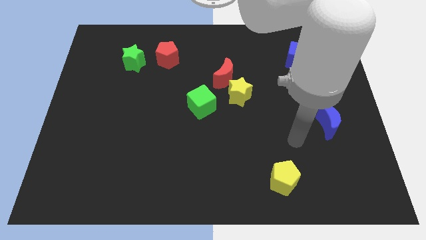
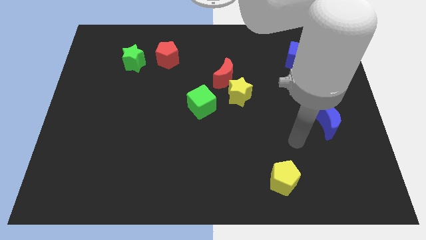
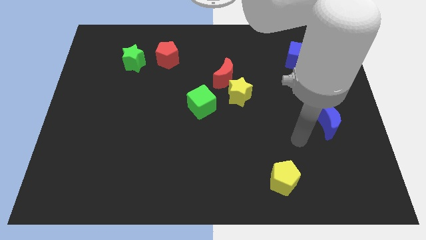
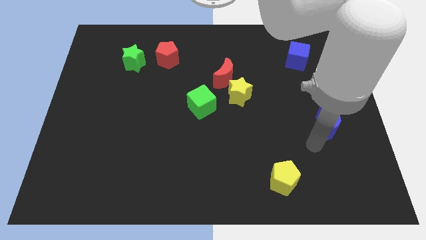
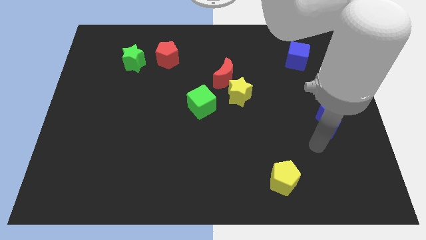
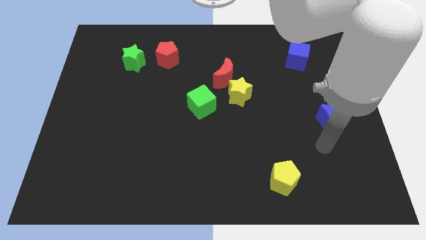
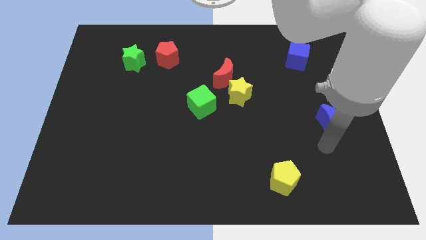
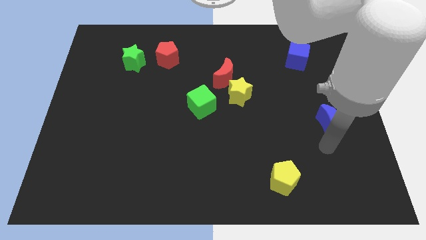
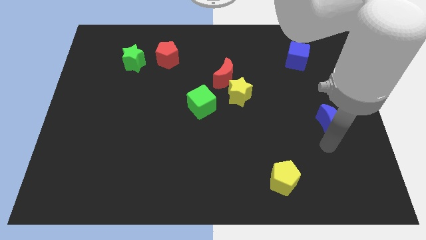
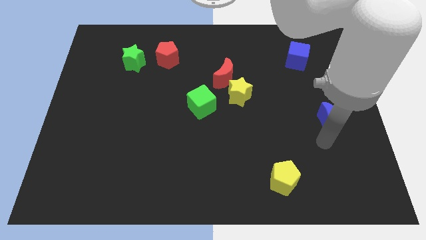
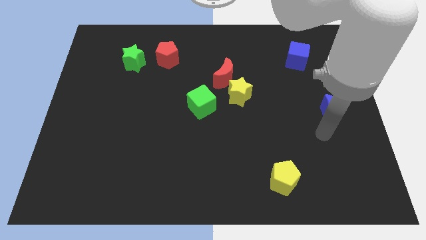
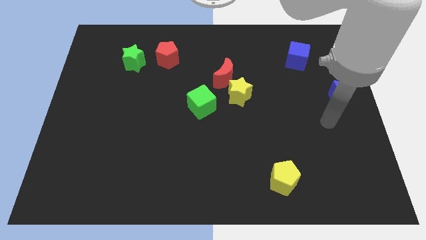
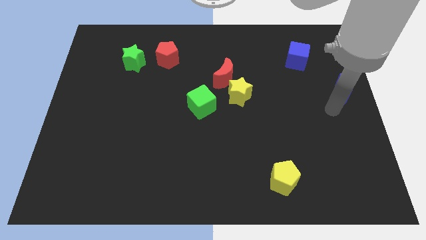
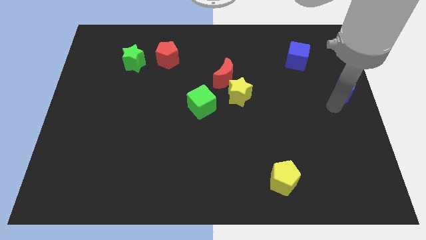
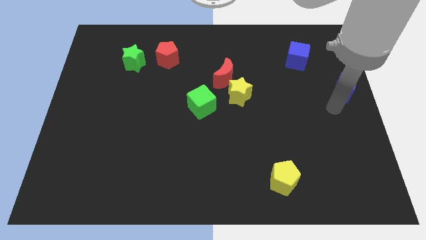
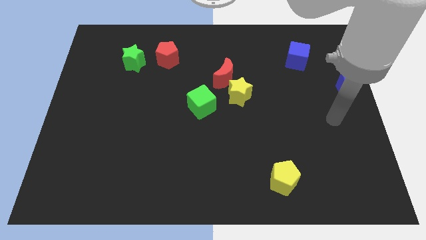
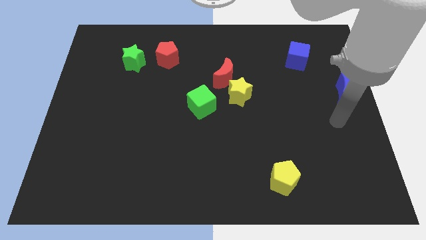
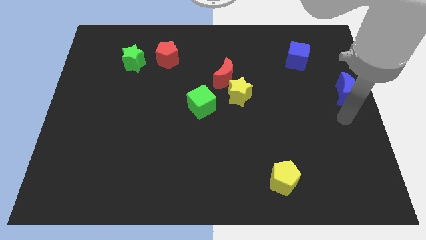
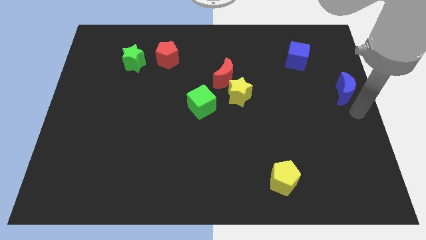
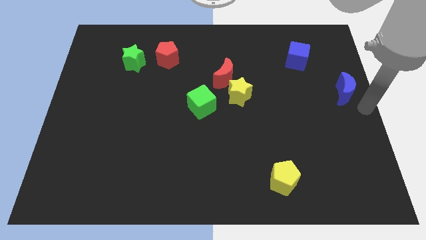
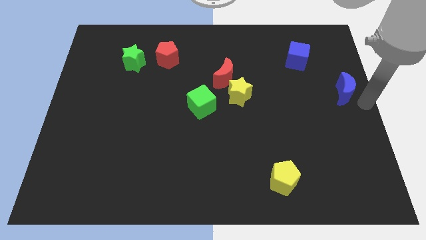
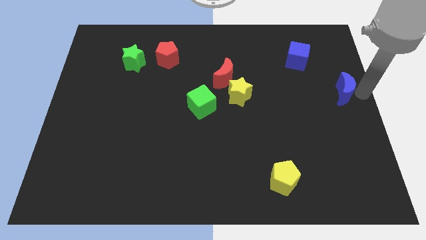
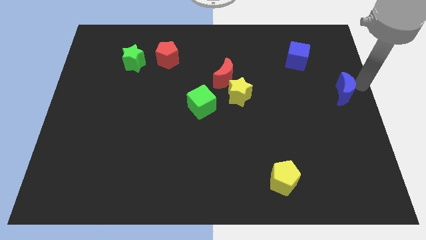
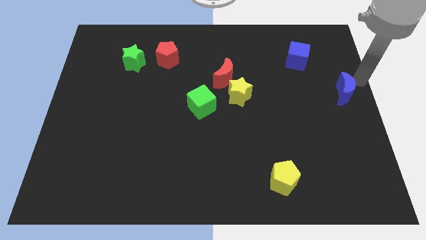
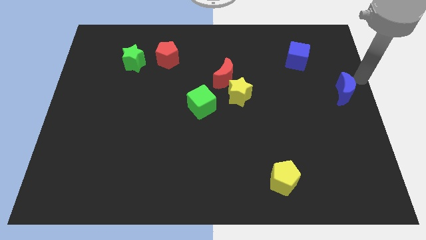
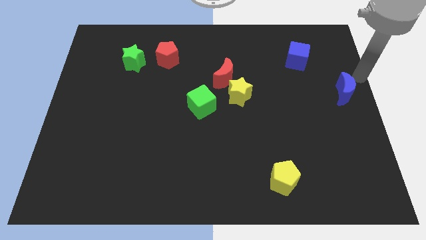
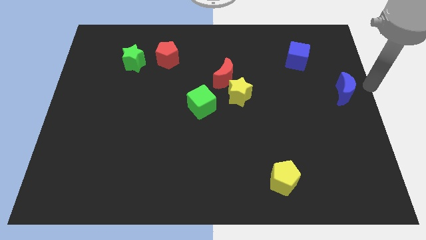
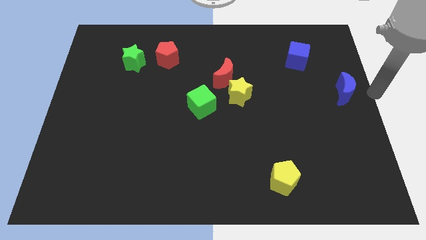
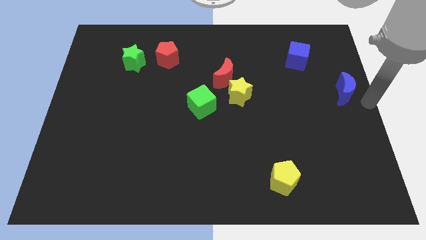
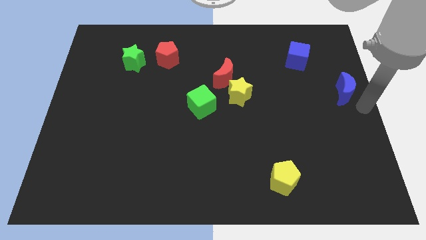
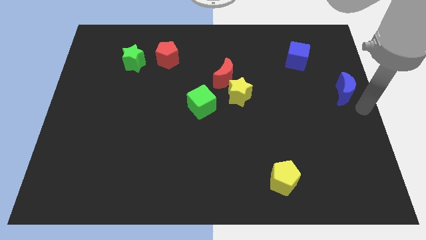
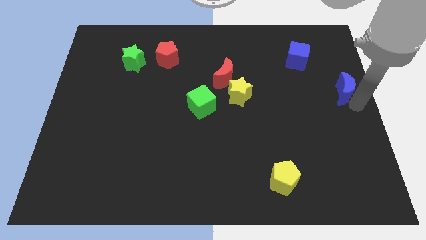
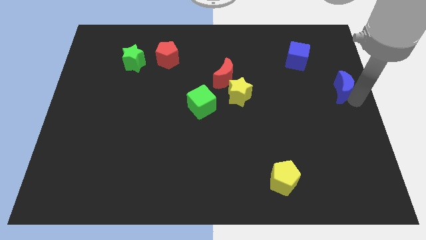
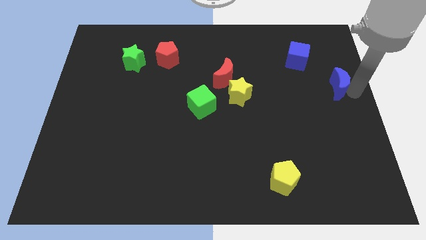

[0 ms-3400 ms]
place the blue moon at the right center of the board

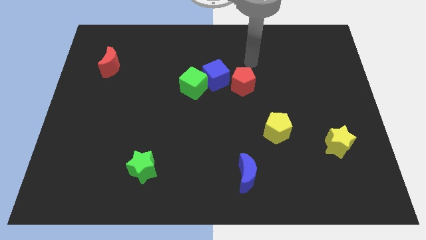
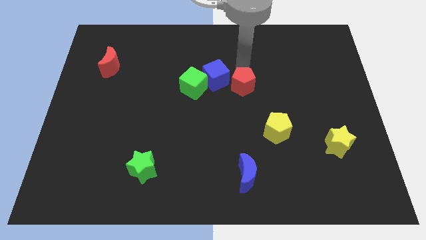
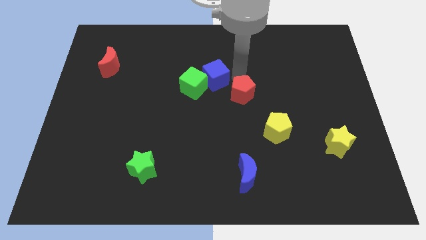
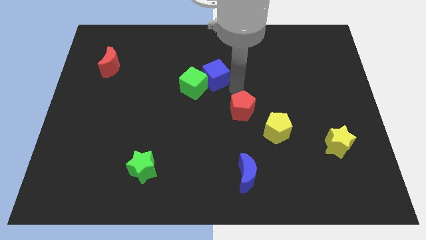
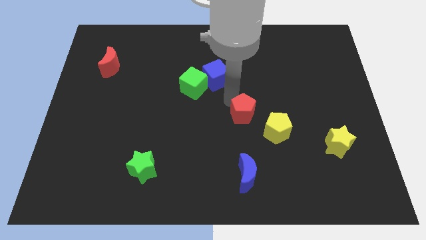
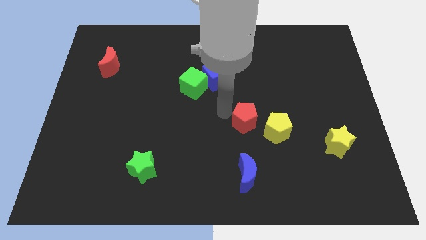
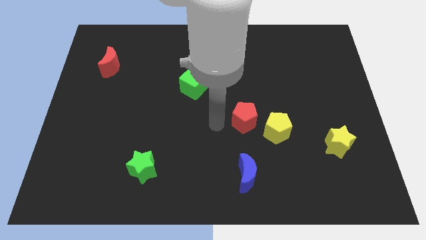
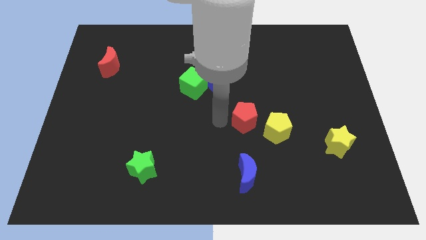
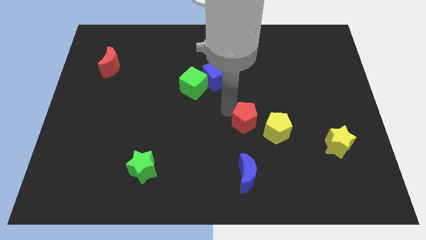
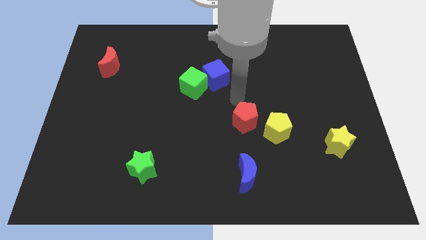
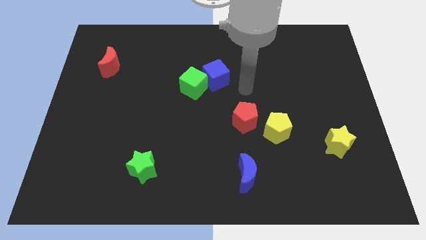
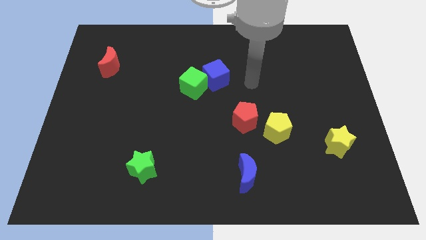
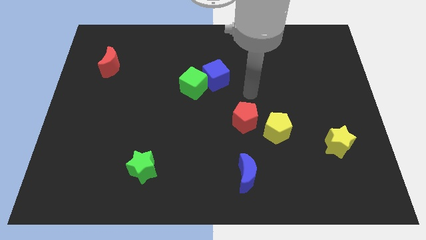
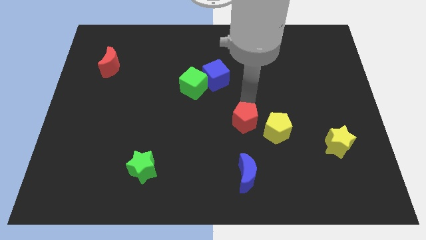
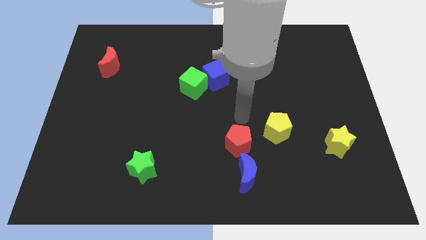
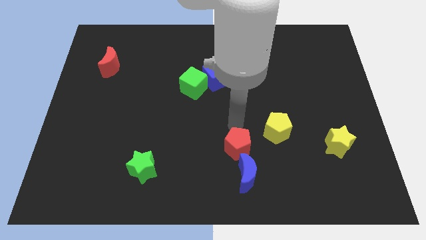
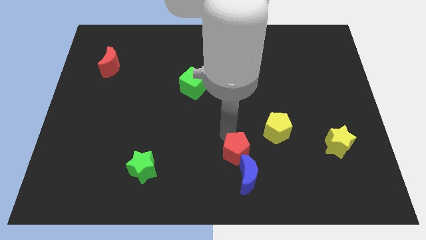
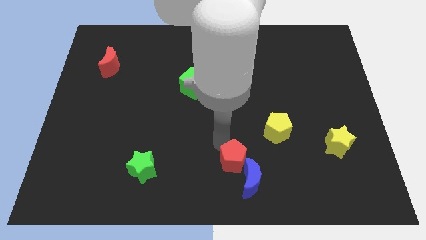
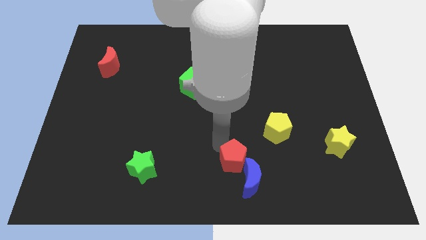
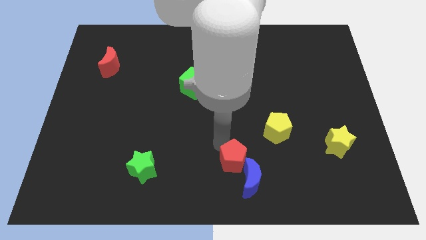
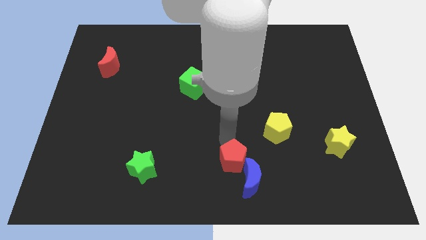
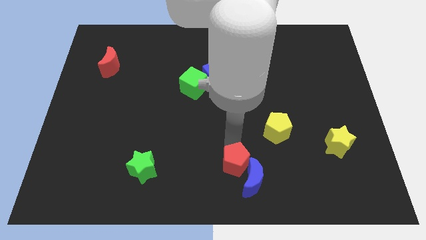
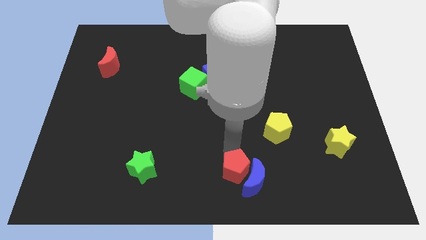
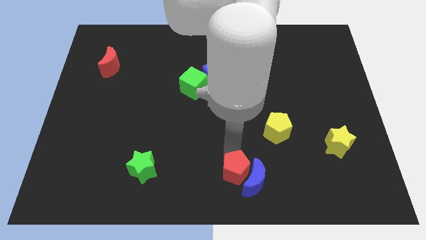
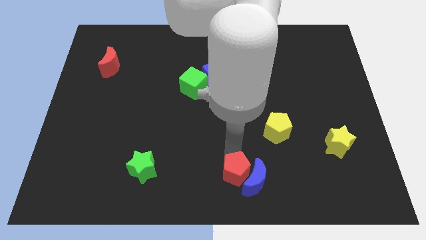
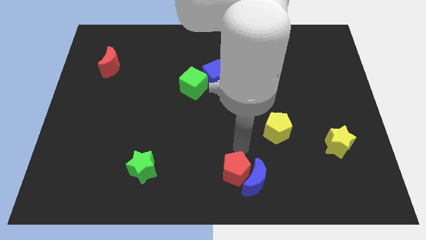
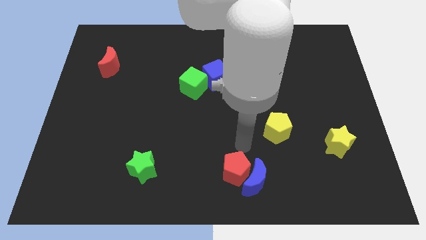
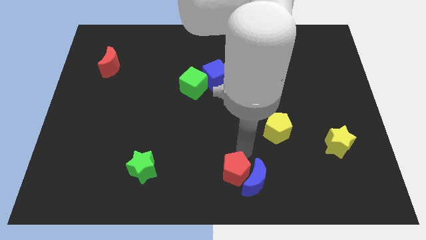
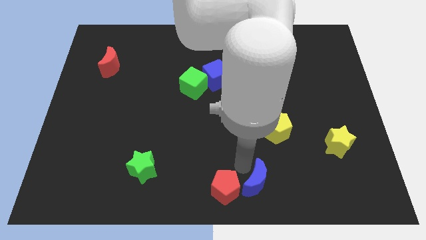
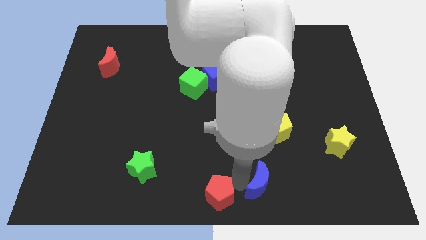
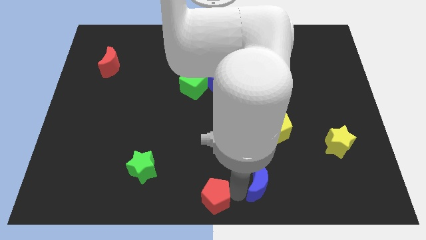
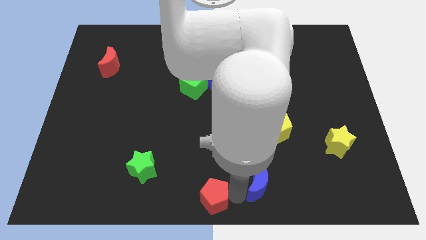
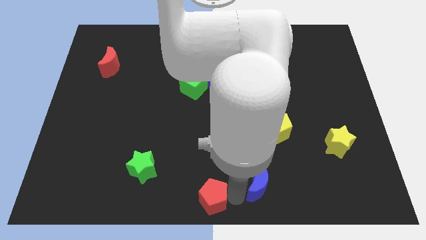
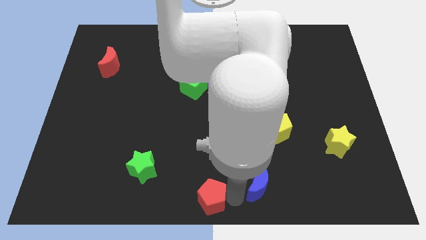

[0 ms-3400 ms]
push the red pentagon to the bottom center

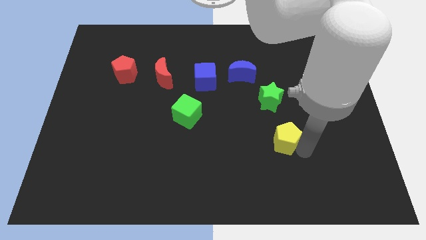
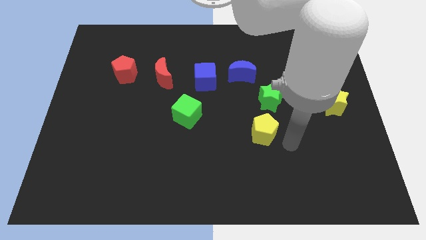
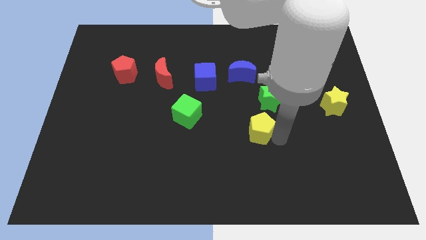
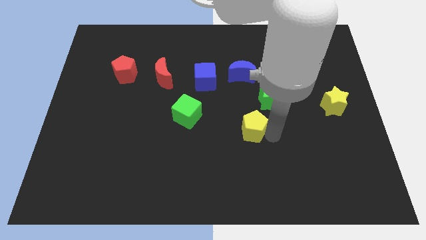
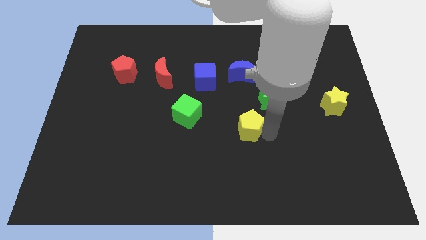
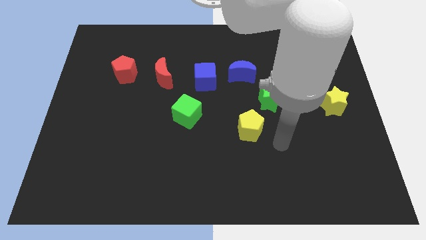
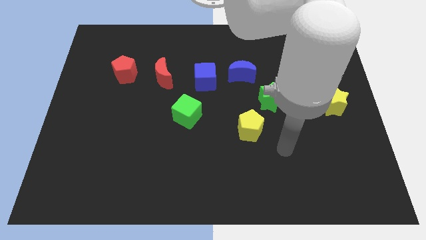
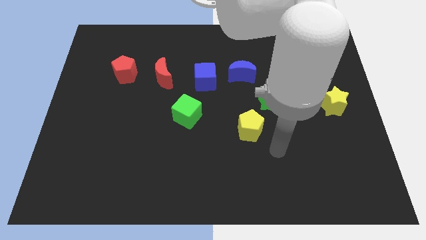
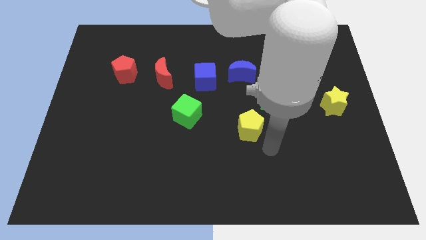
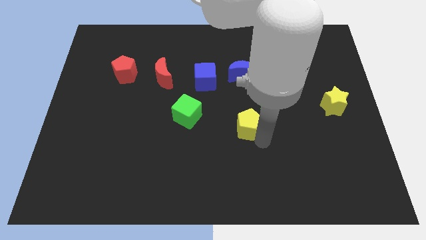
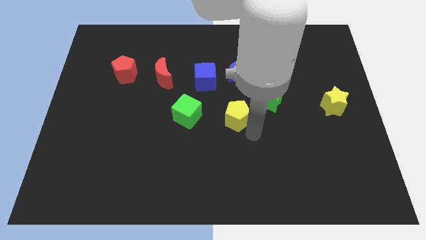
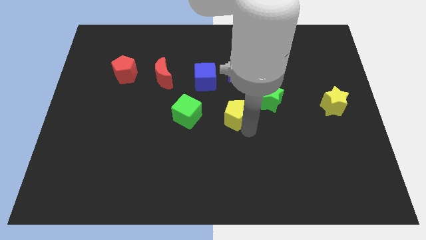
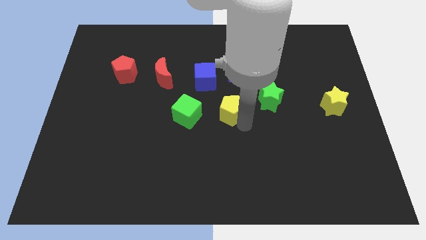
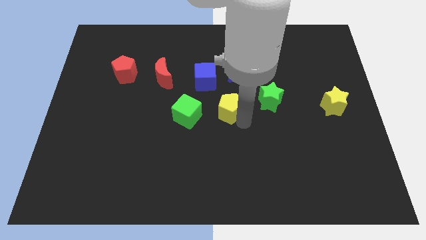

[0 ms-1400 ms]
place the yellow pentagon to the center of the board

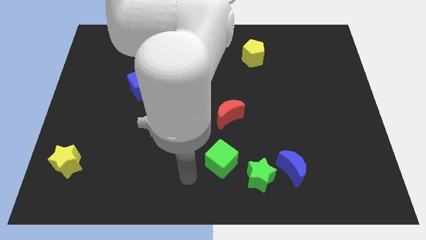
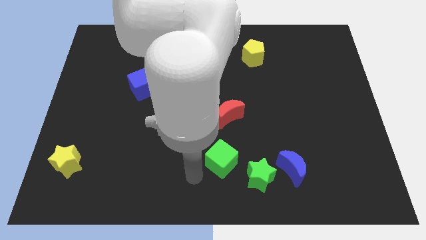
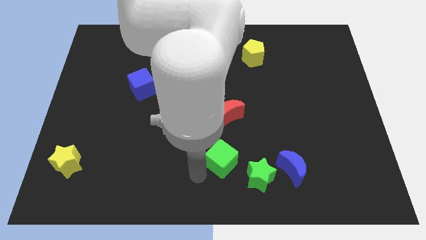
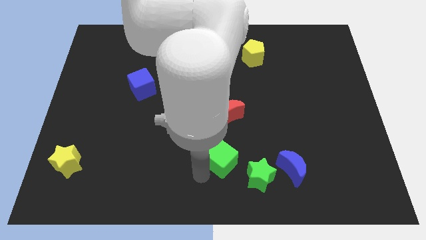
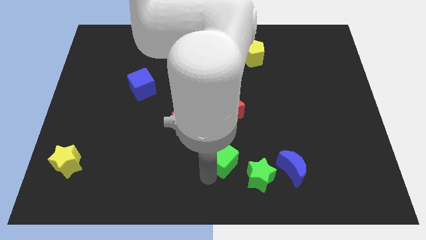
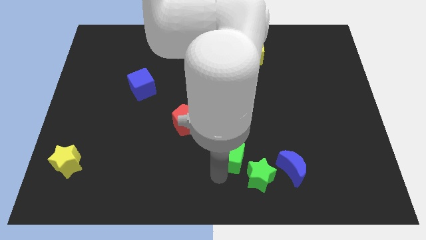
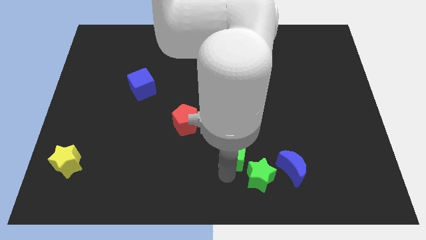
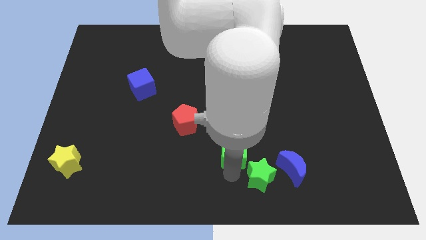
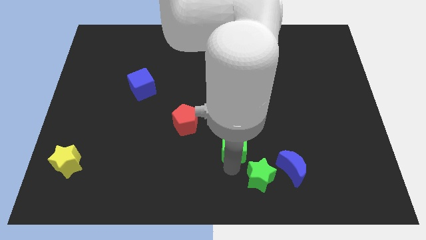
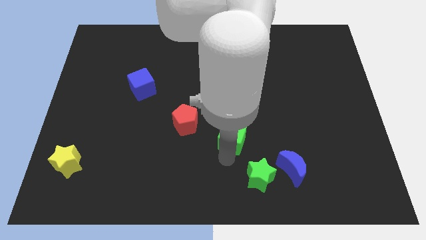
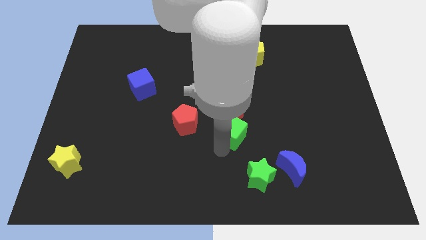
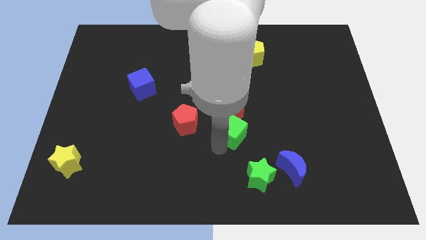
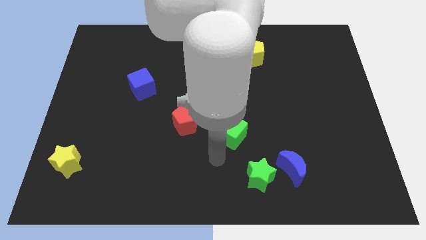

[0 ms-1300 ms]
place green cube below red crescent
